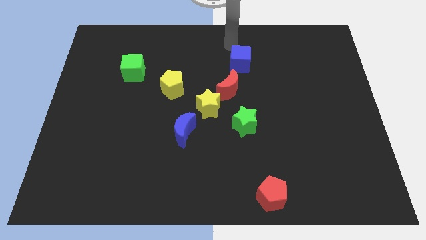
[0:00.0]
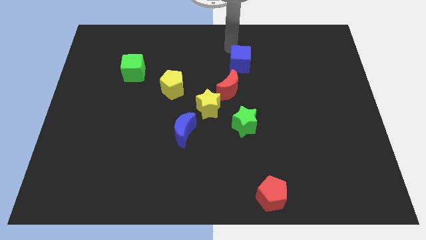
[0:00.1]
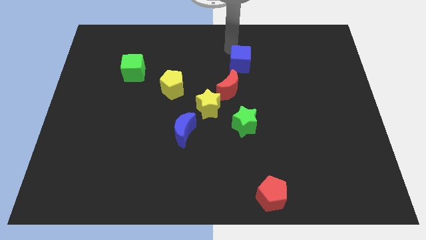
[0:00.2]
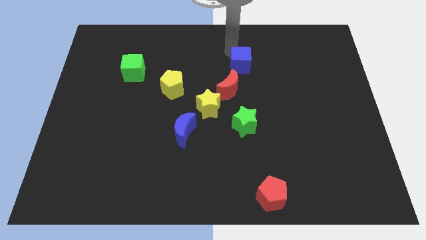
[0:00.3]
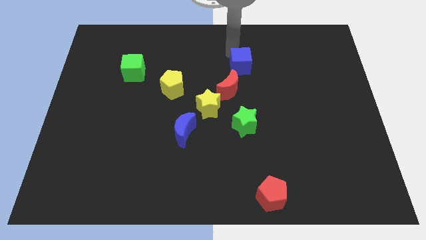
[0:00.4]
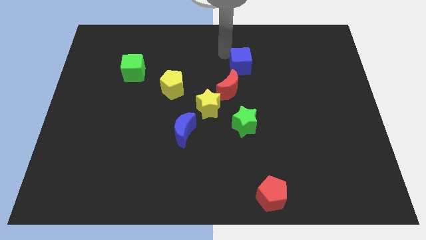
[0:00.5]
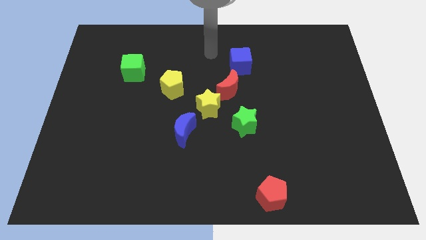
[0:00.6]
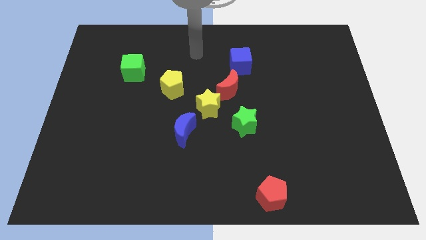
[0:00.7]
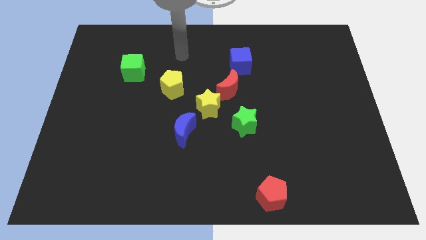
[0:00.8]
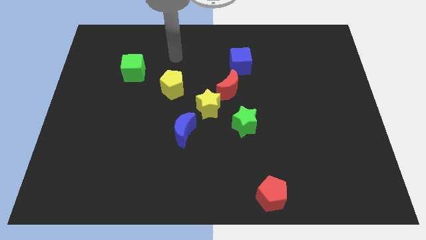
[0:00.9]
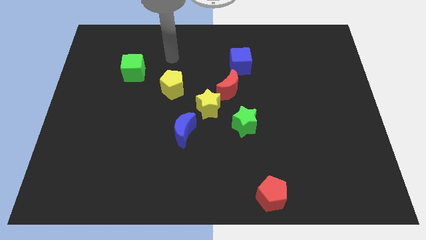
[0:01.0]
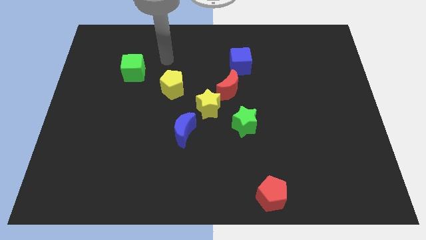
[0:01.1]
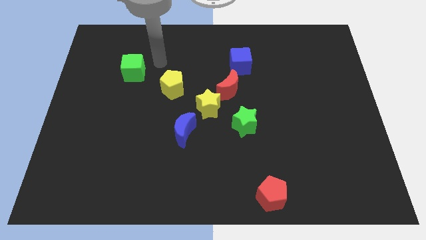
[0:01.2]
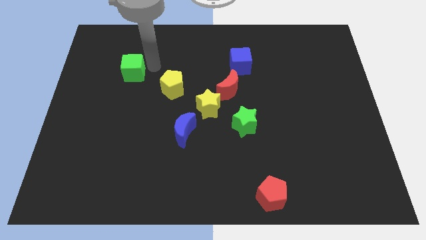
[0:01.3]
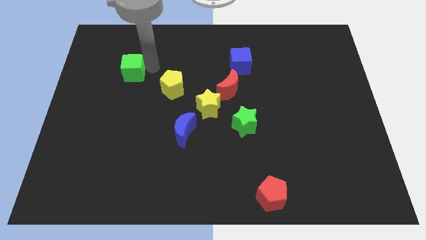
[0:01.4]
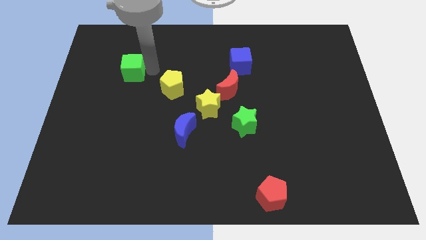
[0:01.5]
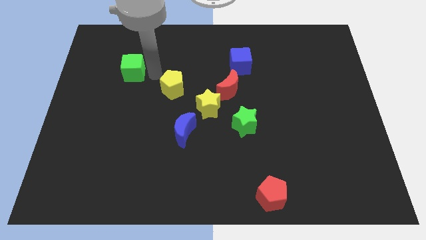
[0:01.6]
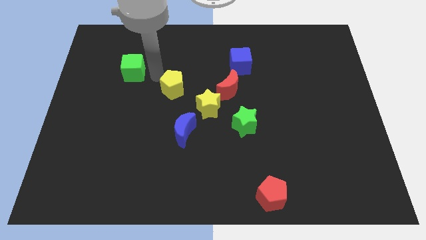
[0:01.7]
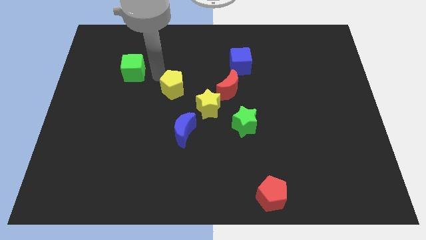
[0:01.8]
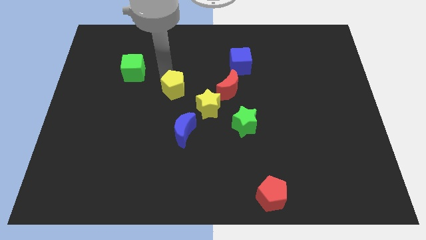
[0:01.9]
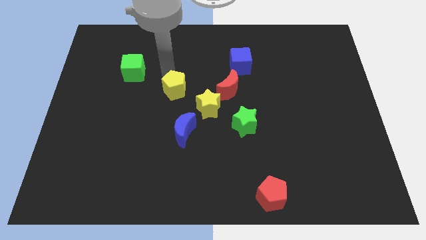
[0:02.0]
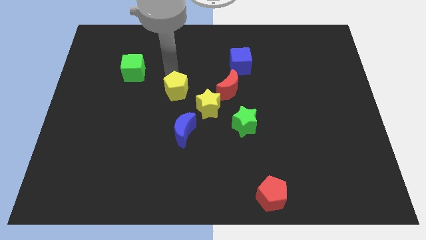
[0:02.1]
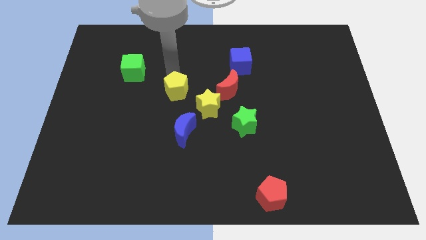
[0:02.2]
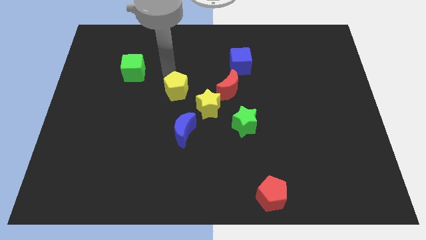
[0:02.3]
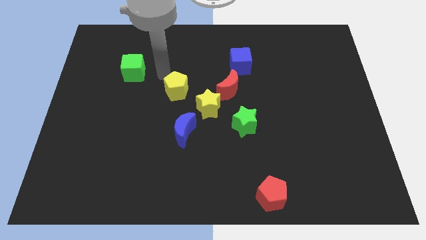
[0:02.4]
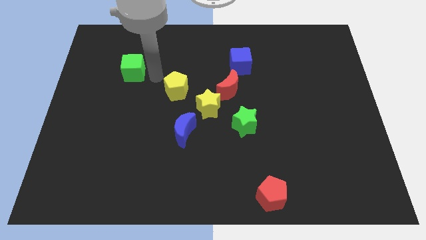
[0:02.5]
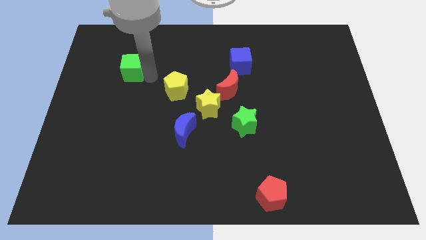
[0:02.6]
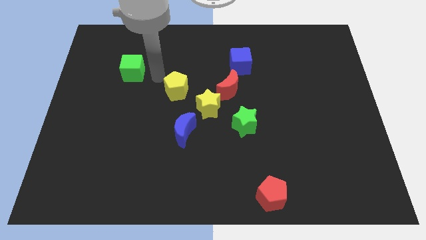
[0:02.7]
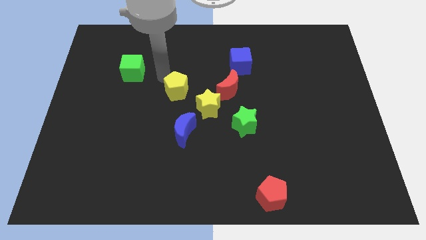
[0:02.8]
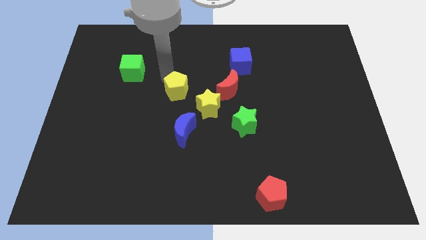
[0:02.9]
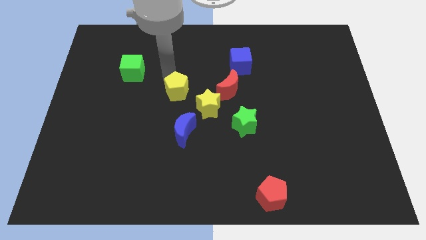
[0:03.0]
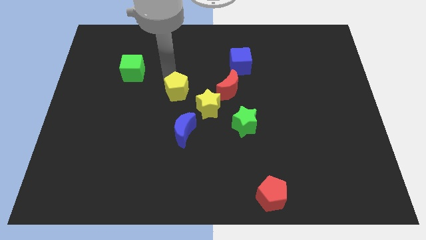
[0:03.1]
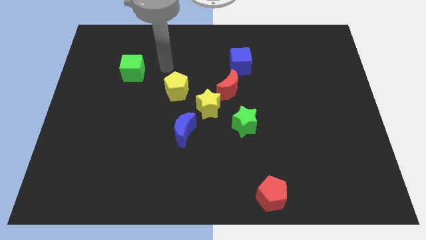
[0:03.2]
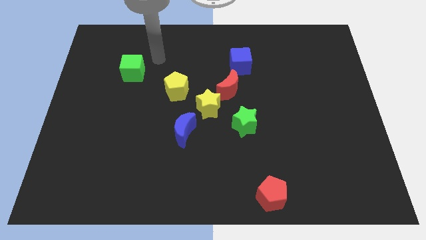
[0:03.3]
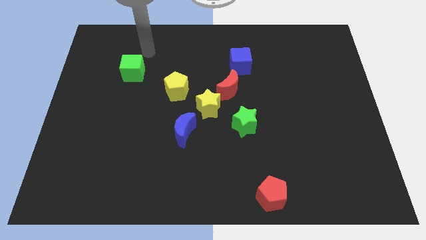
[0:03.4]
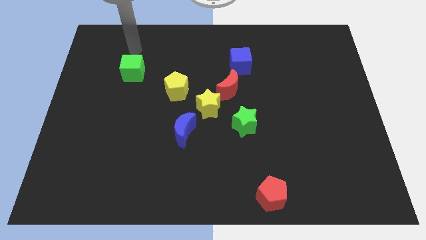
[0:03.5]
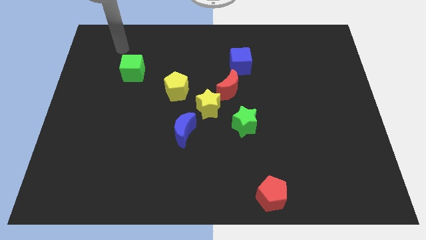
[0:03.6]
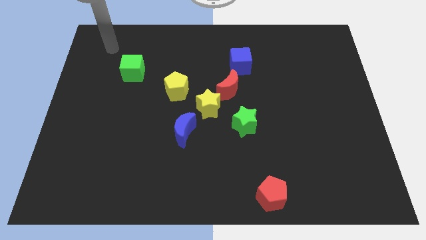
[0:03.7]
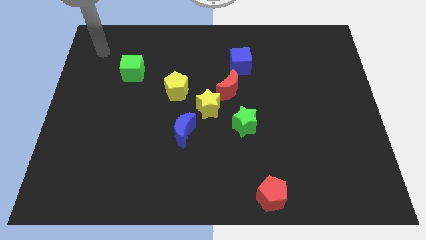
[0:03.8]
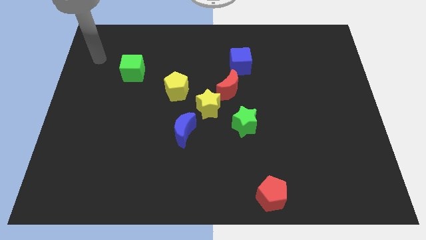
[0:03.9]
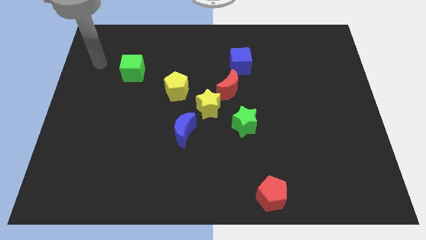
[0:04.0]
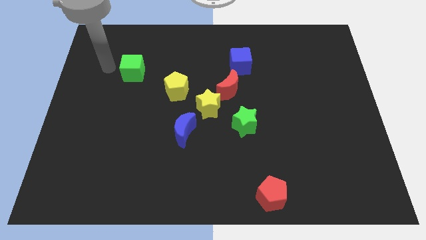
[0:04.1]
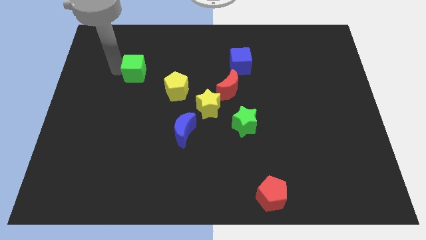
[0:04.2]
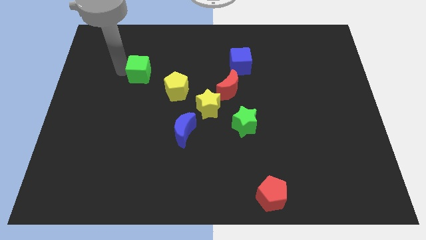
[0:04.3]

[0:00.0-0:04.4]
place your ram left to green cube

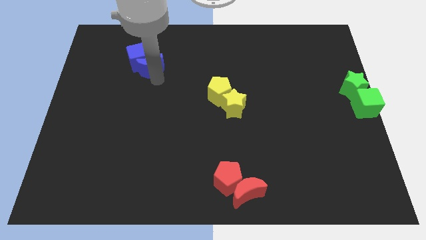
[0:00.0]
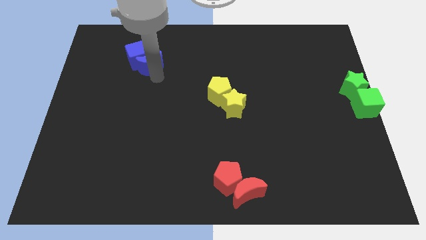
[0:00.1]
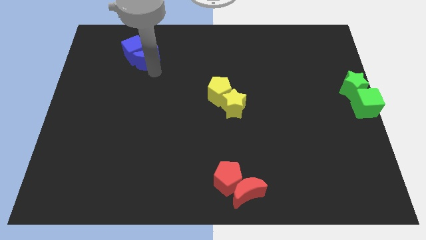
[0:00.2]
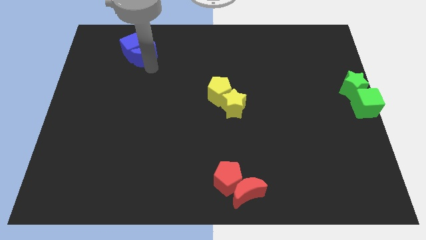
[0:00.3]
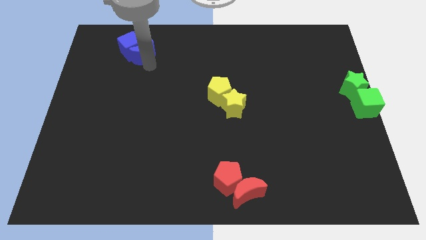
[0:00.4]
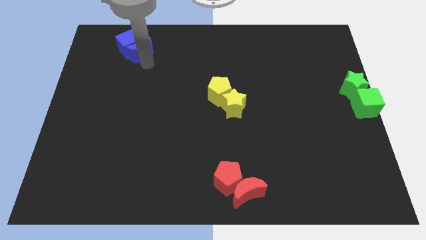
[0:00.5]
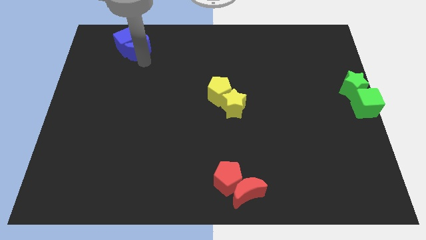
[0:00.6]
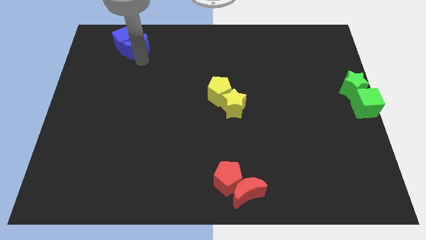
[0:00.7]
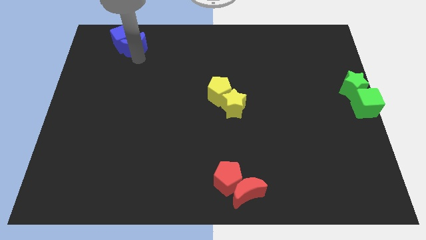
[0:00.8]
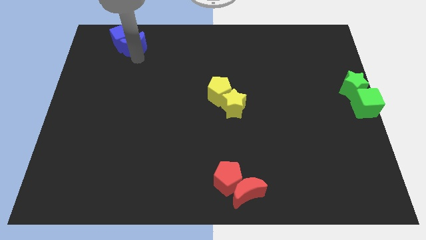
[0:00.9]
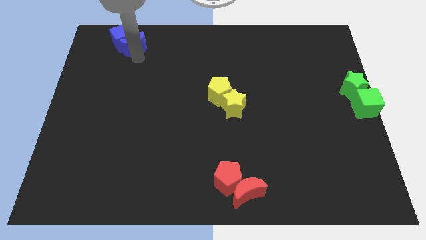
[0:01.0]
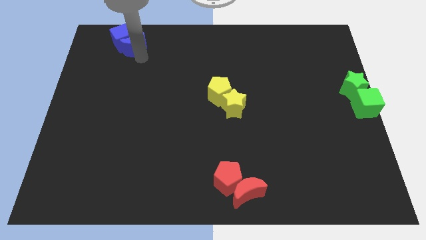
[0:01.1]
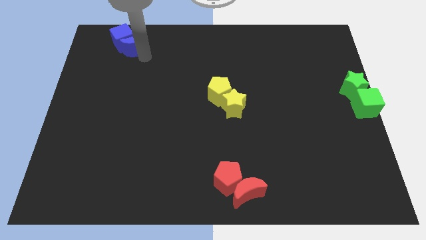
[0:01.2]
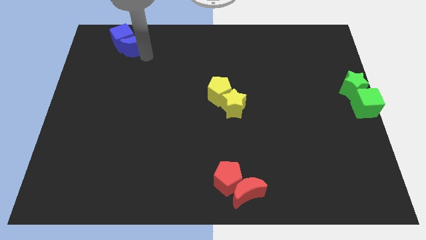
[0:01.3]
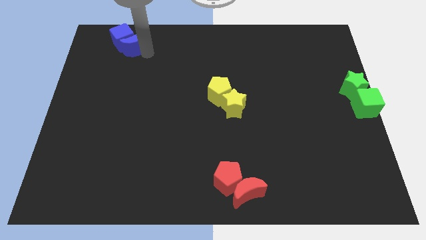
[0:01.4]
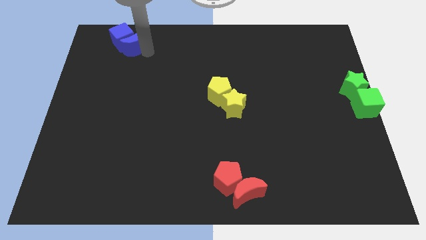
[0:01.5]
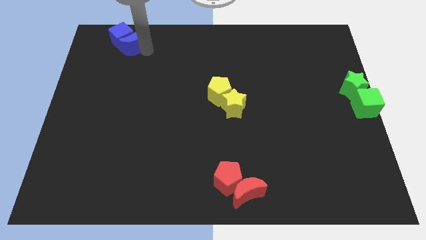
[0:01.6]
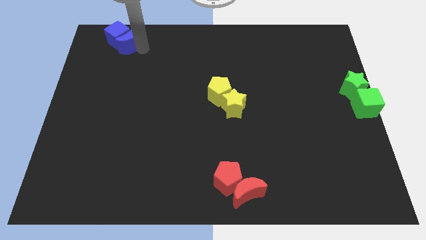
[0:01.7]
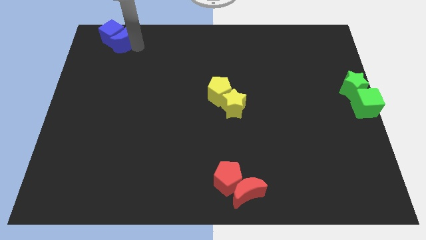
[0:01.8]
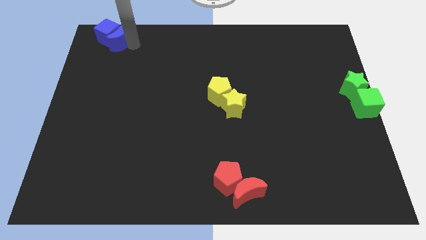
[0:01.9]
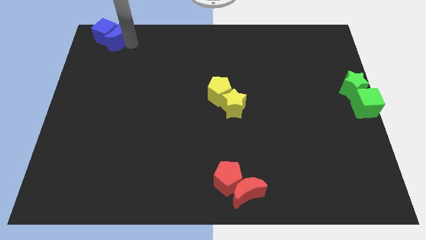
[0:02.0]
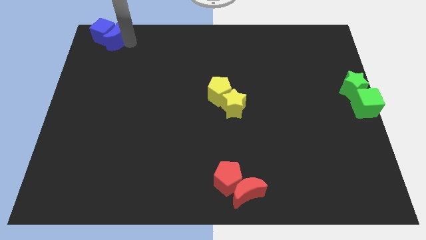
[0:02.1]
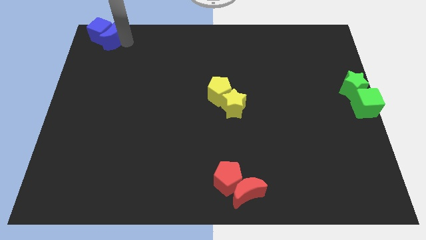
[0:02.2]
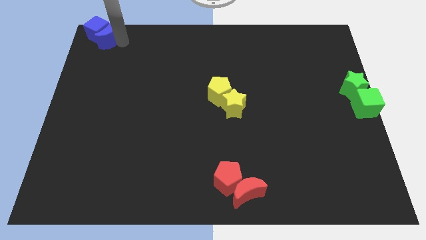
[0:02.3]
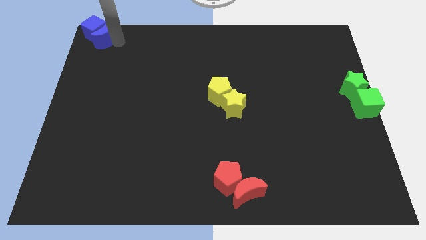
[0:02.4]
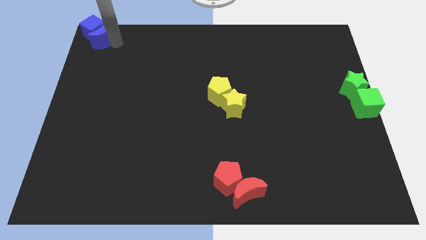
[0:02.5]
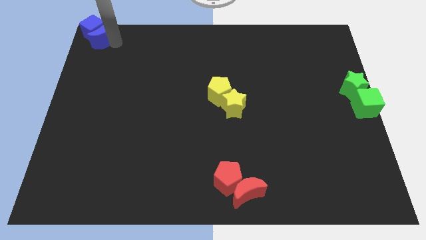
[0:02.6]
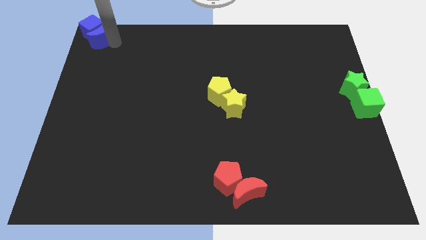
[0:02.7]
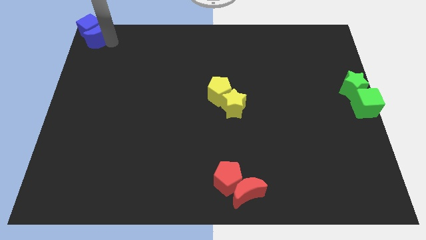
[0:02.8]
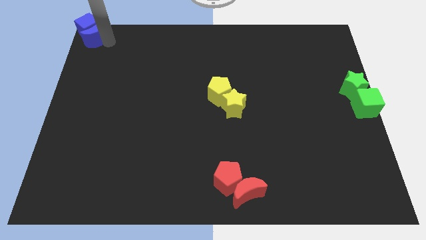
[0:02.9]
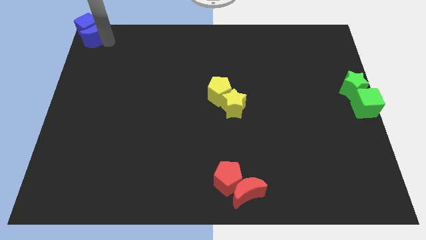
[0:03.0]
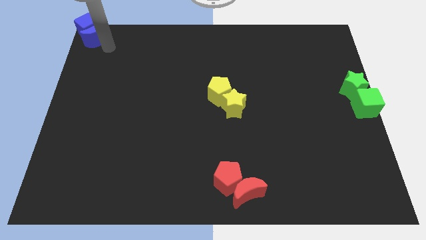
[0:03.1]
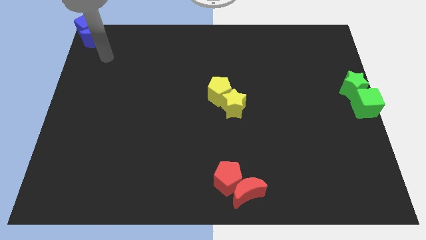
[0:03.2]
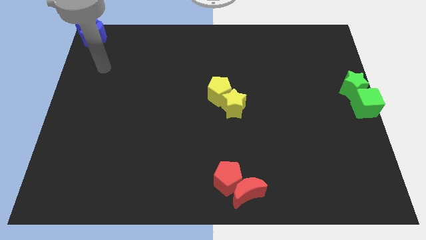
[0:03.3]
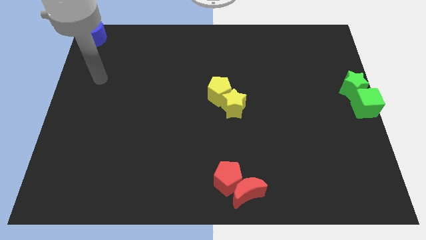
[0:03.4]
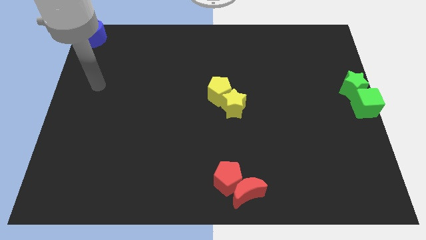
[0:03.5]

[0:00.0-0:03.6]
put the blue things at the top left corner of the table

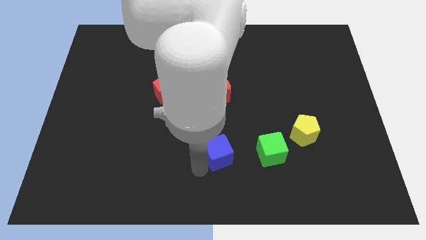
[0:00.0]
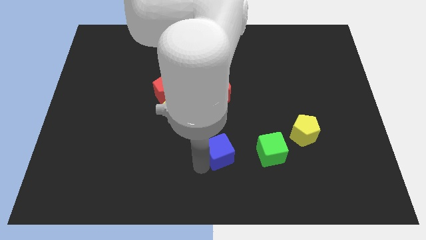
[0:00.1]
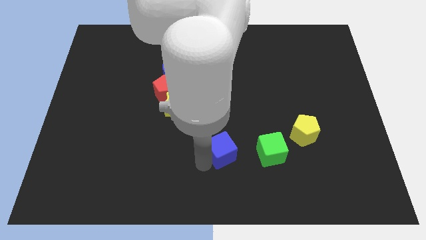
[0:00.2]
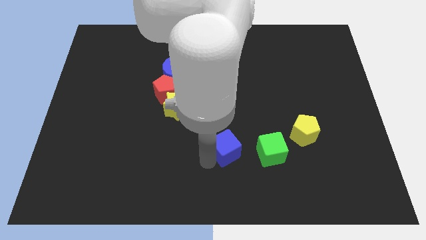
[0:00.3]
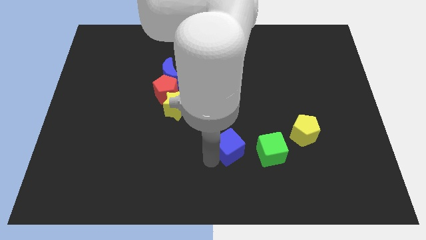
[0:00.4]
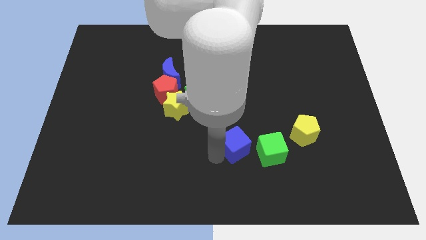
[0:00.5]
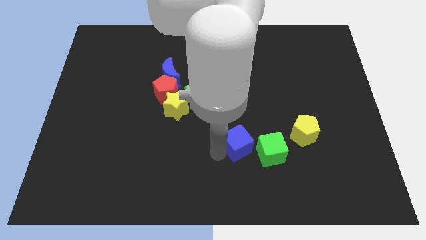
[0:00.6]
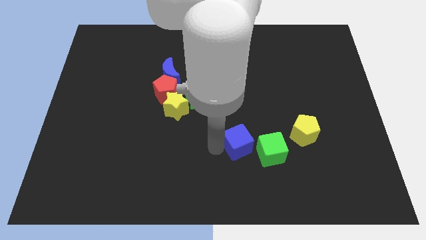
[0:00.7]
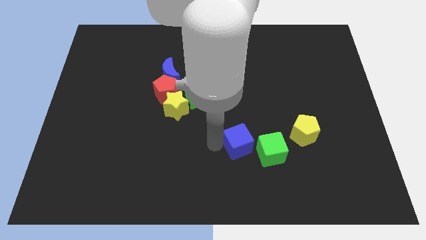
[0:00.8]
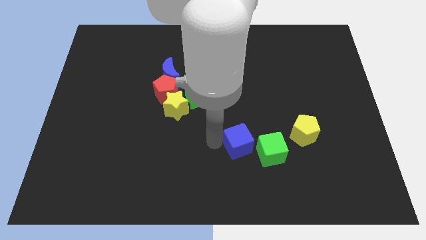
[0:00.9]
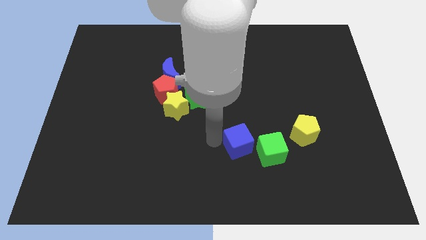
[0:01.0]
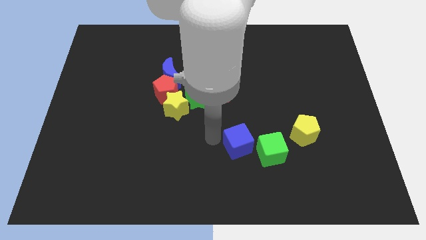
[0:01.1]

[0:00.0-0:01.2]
place the blue cube diagonally to the left top of the green cube
